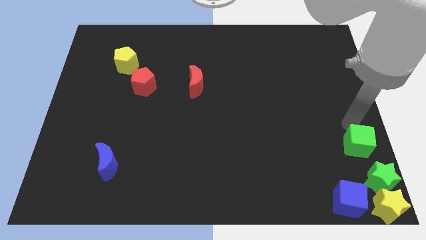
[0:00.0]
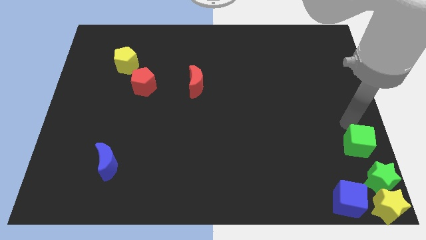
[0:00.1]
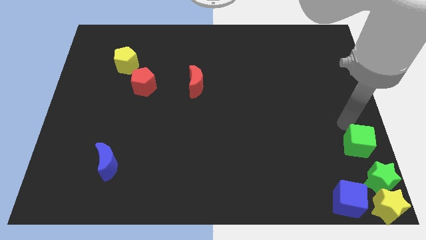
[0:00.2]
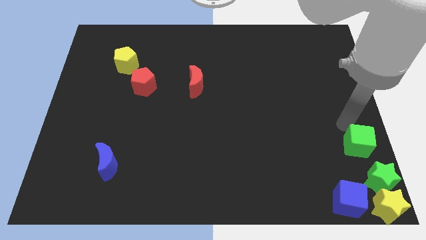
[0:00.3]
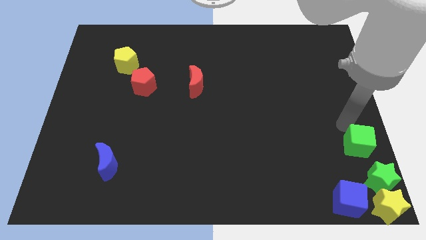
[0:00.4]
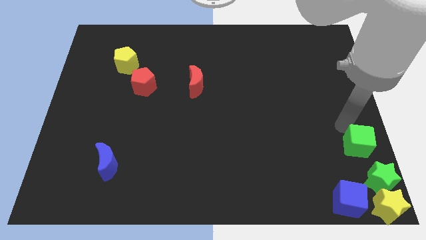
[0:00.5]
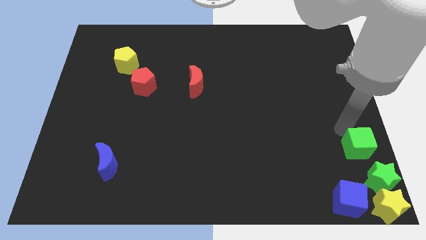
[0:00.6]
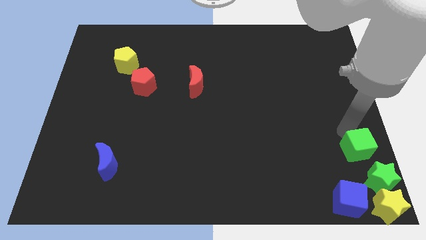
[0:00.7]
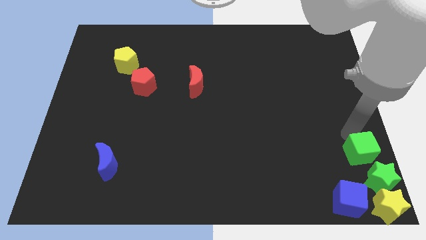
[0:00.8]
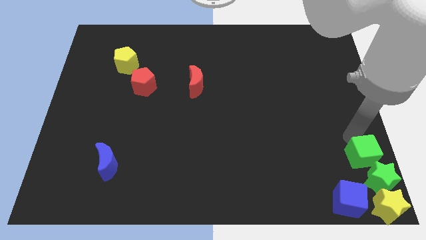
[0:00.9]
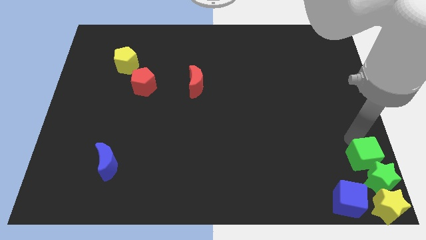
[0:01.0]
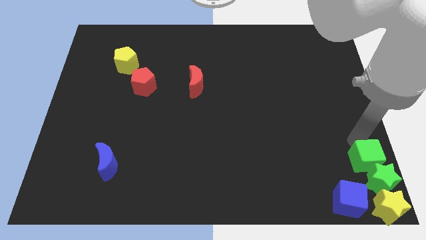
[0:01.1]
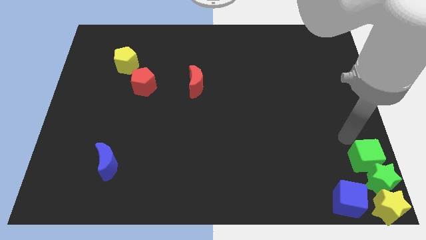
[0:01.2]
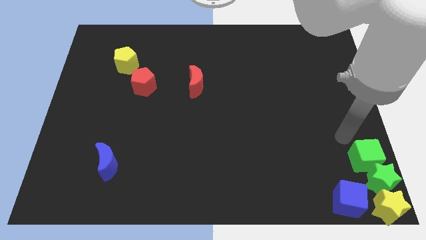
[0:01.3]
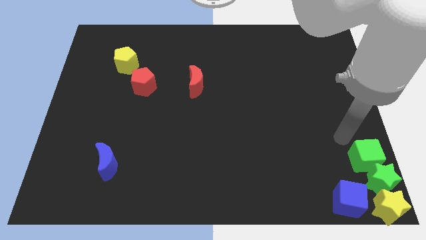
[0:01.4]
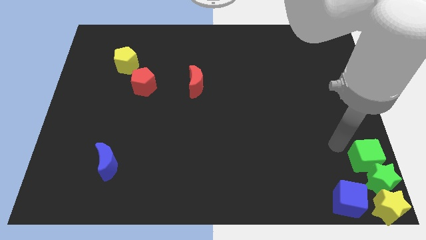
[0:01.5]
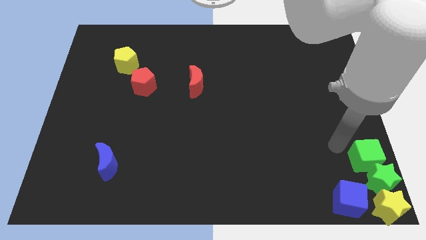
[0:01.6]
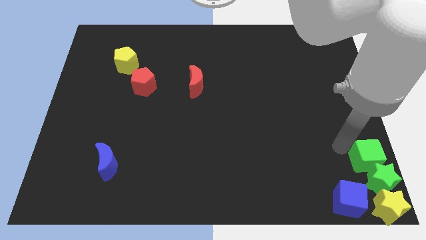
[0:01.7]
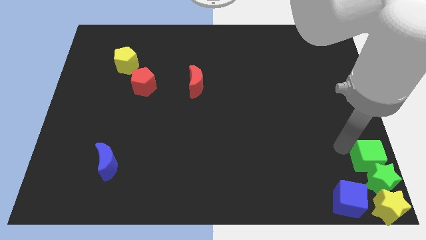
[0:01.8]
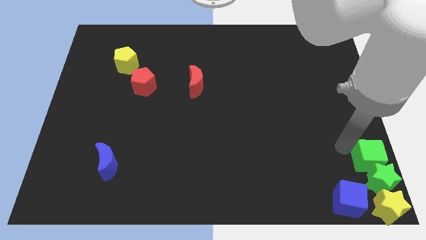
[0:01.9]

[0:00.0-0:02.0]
place the green cube close to the green star

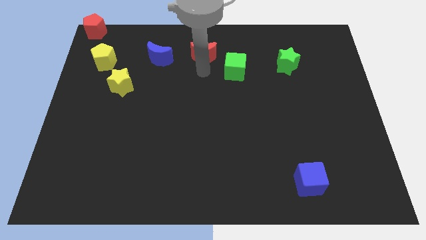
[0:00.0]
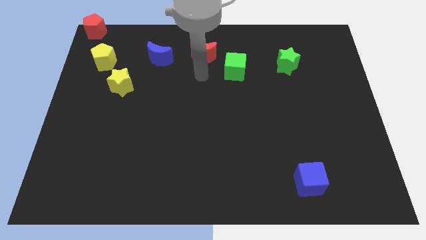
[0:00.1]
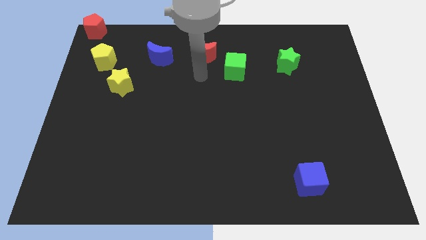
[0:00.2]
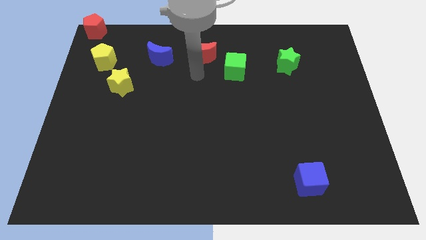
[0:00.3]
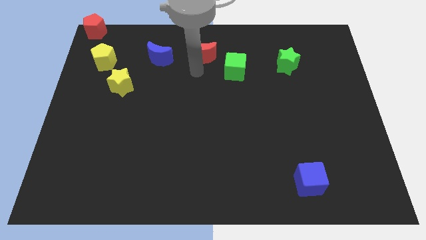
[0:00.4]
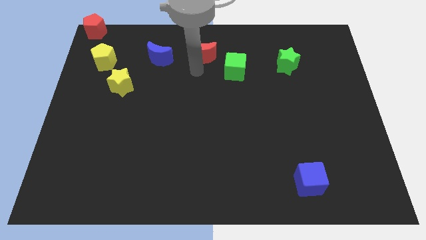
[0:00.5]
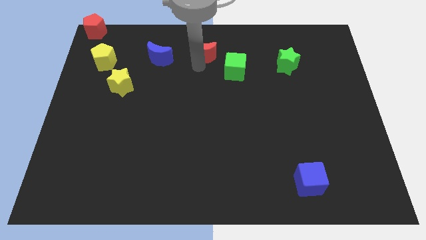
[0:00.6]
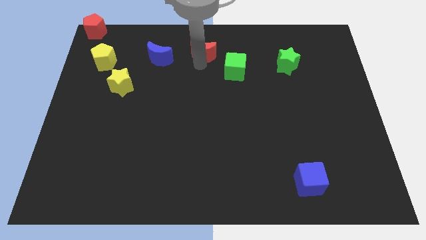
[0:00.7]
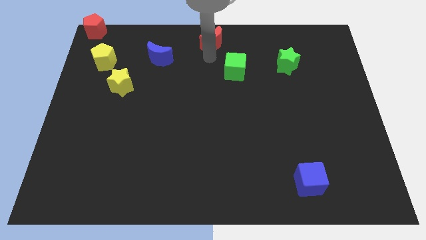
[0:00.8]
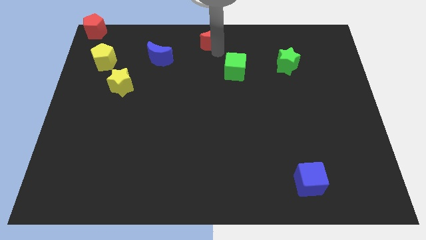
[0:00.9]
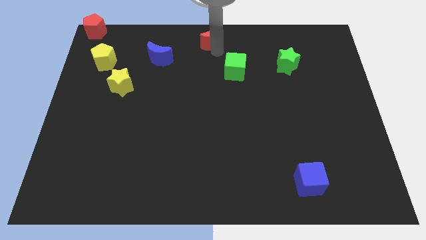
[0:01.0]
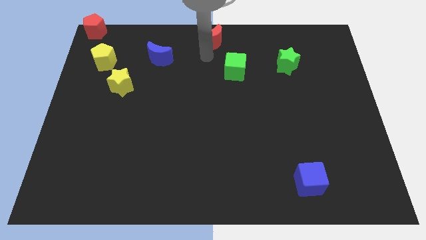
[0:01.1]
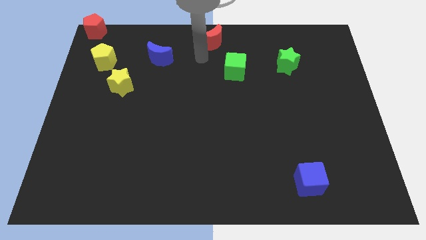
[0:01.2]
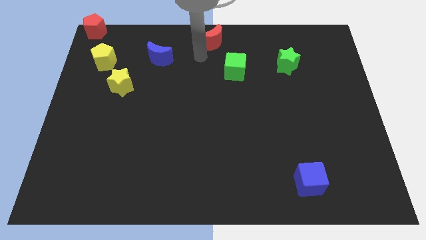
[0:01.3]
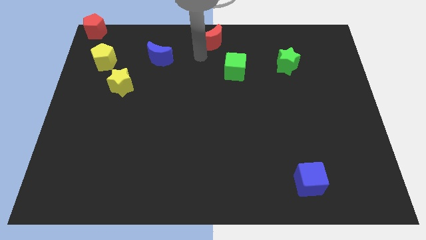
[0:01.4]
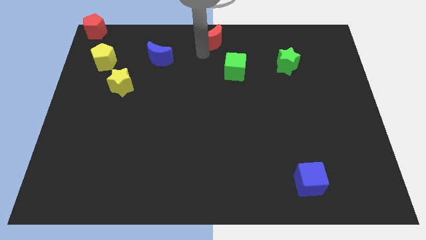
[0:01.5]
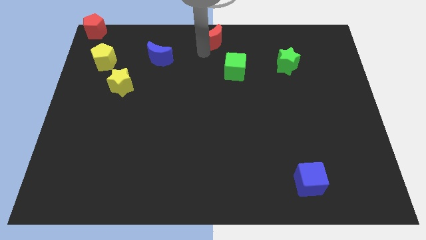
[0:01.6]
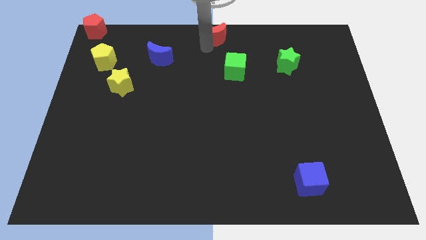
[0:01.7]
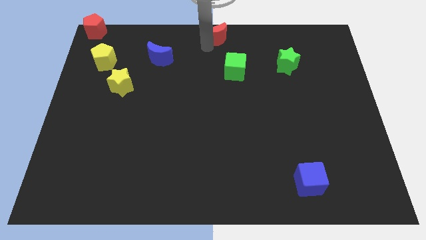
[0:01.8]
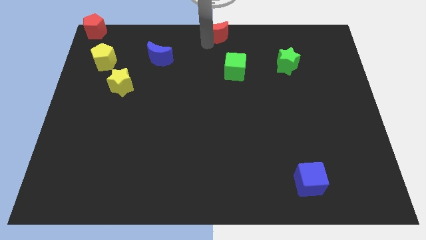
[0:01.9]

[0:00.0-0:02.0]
move the red crescent to the top center of the board

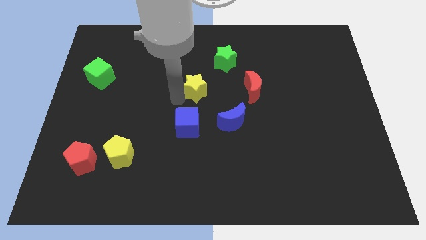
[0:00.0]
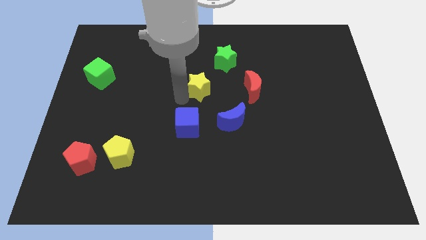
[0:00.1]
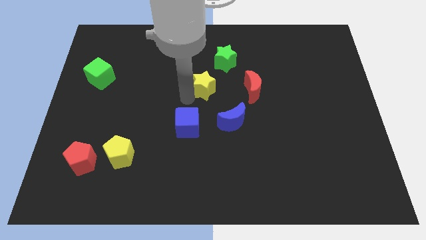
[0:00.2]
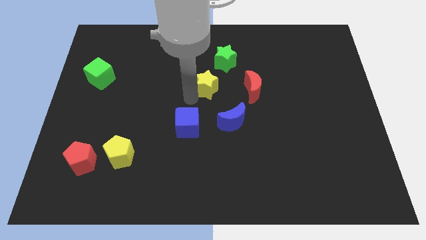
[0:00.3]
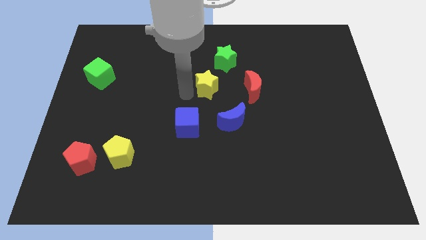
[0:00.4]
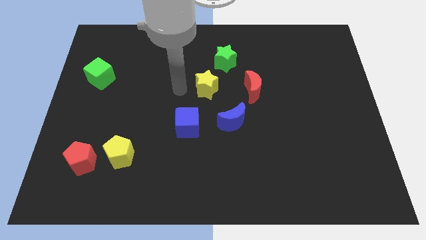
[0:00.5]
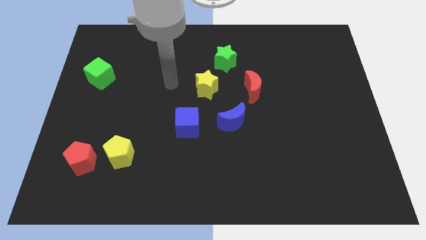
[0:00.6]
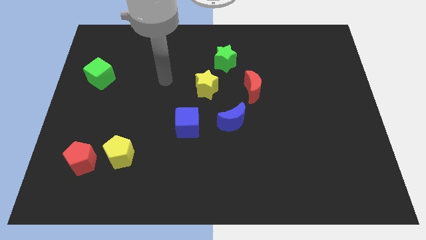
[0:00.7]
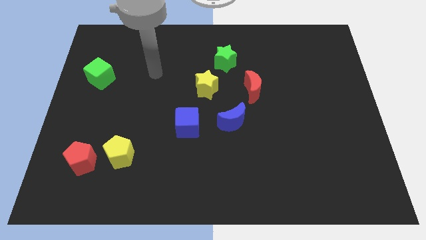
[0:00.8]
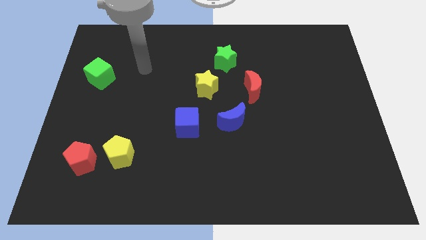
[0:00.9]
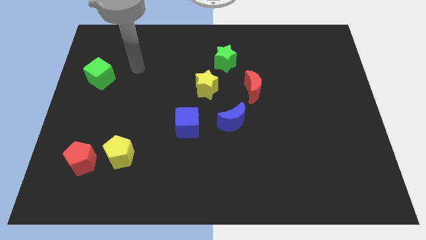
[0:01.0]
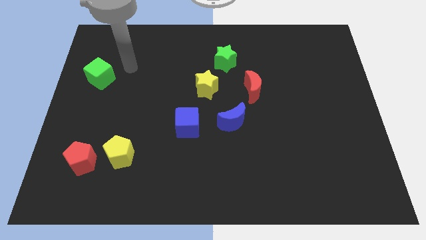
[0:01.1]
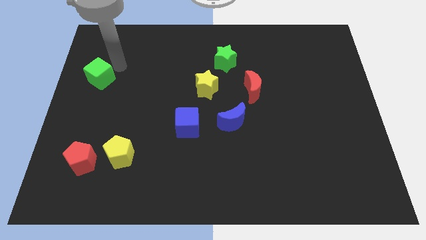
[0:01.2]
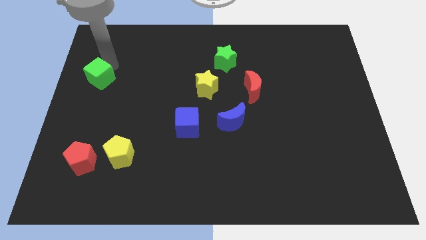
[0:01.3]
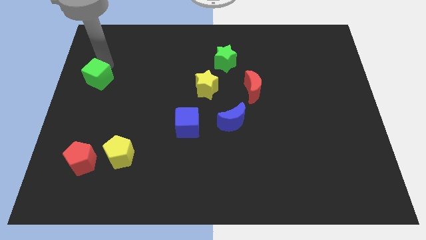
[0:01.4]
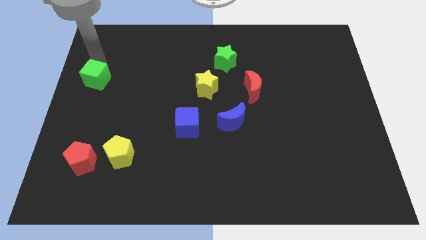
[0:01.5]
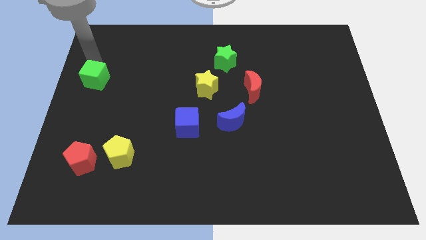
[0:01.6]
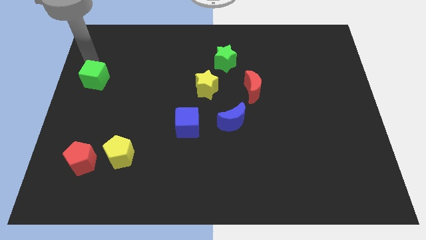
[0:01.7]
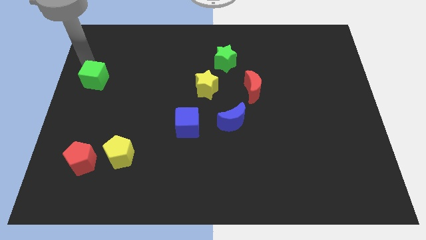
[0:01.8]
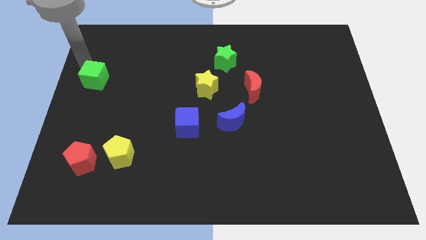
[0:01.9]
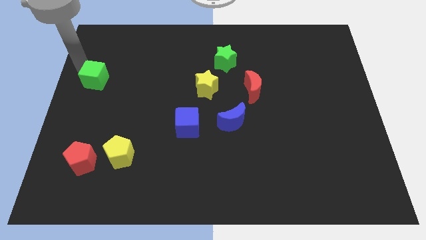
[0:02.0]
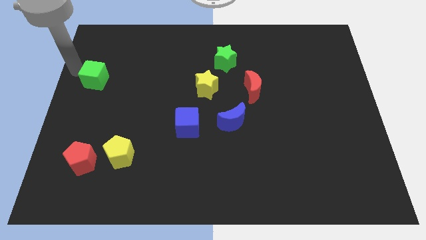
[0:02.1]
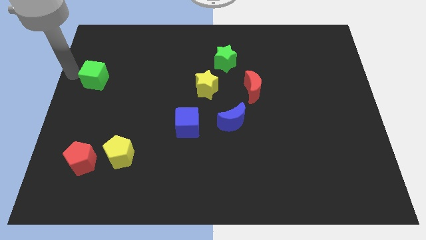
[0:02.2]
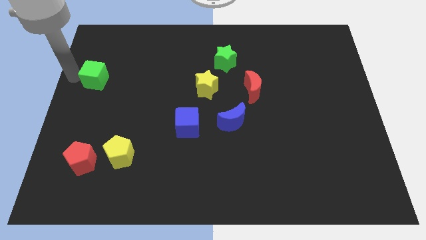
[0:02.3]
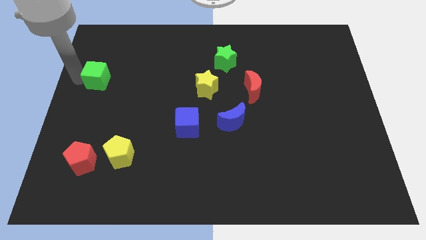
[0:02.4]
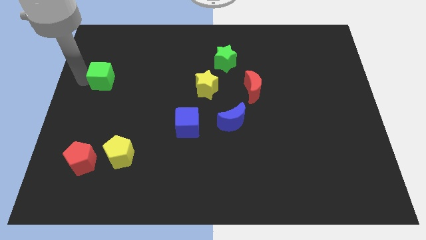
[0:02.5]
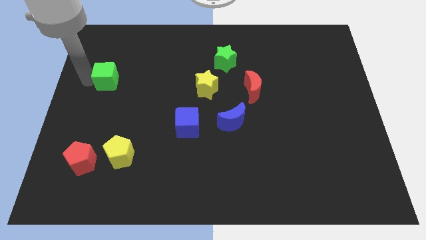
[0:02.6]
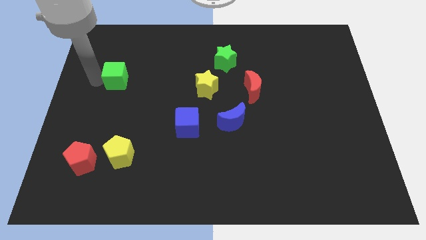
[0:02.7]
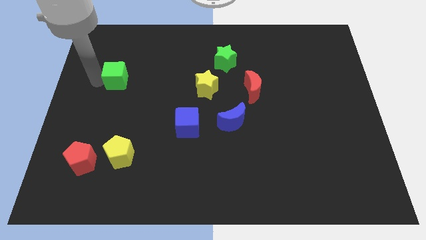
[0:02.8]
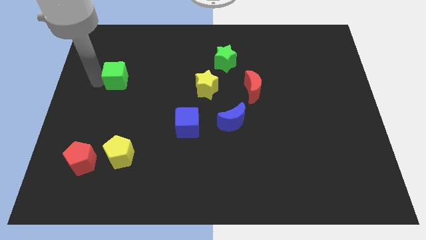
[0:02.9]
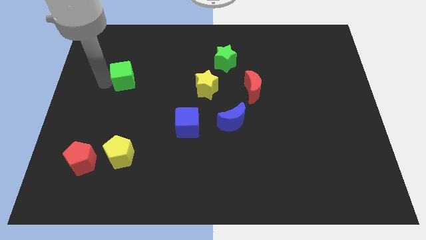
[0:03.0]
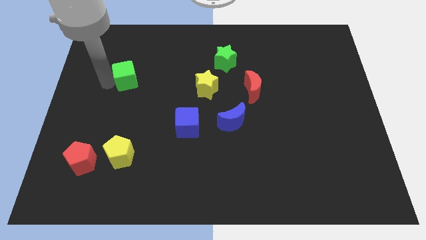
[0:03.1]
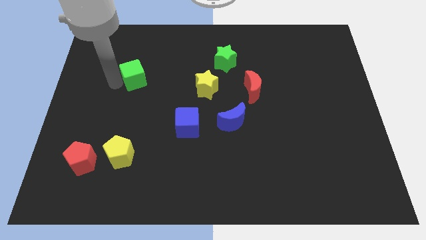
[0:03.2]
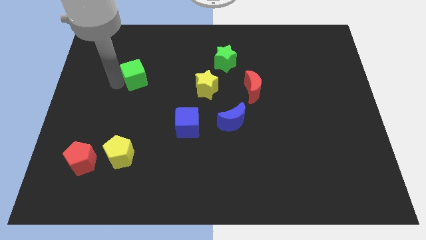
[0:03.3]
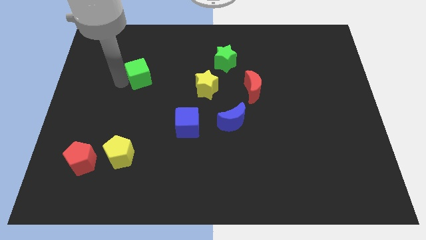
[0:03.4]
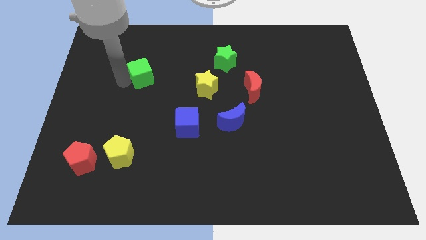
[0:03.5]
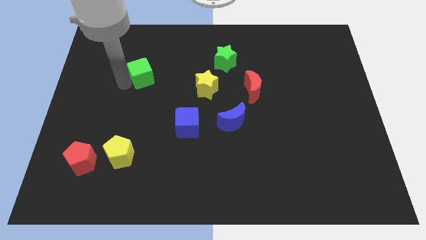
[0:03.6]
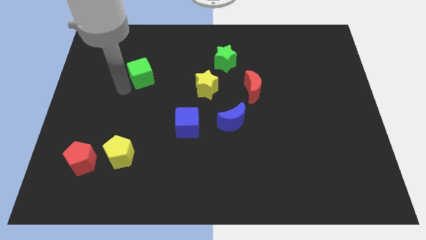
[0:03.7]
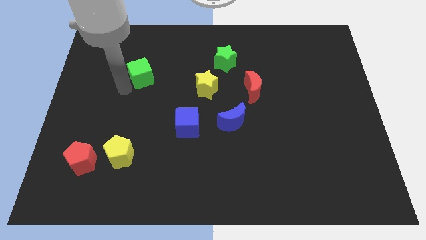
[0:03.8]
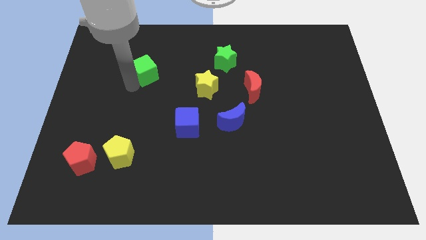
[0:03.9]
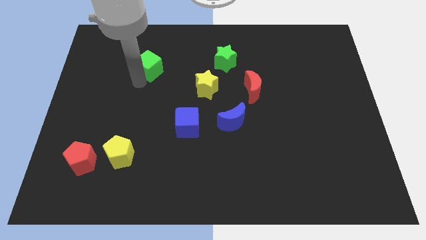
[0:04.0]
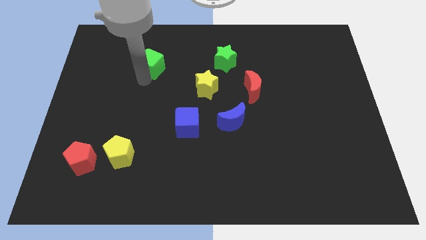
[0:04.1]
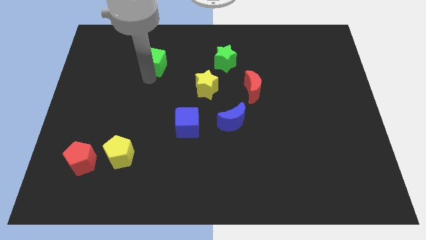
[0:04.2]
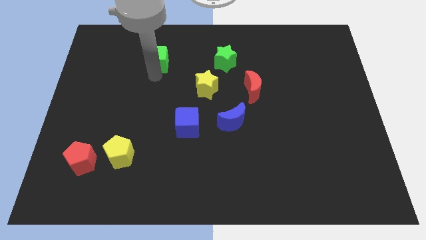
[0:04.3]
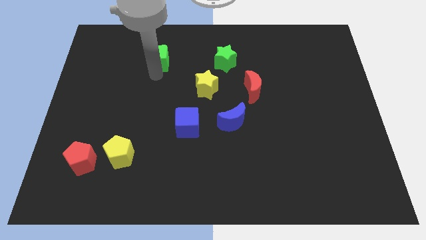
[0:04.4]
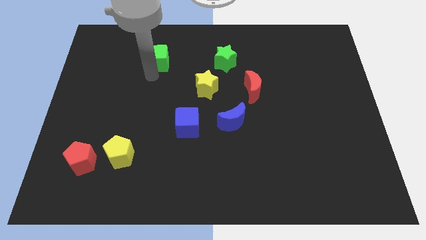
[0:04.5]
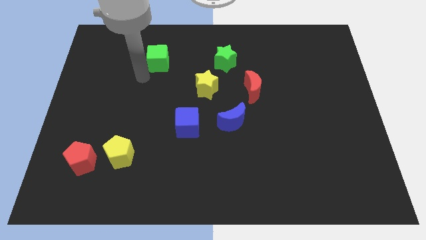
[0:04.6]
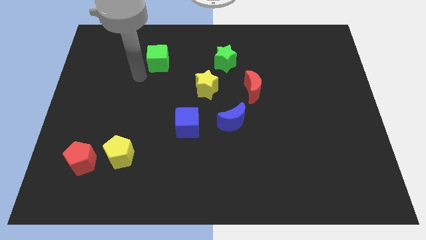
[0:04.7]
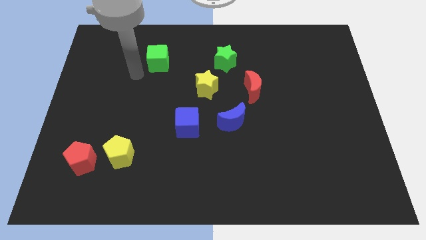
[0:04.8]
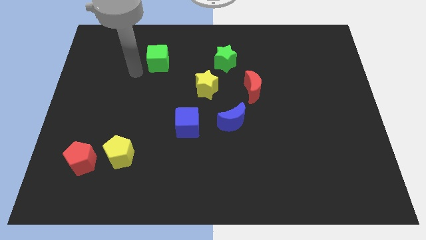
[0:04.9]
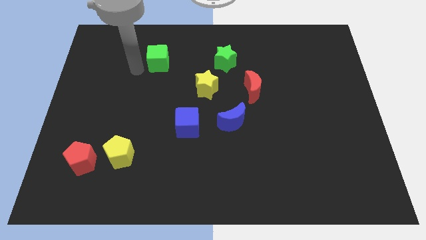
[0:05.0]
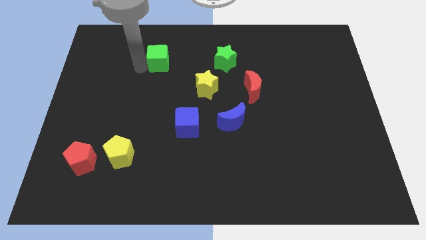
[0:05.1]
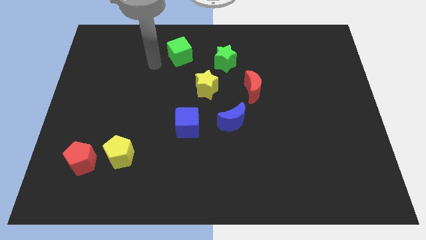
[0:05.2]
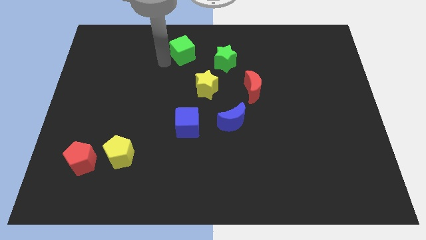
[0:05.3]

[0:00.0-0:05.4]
move the green cube diagonally to the green star
